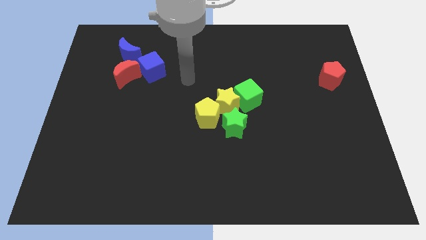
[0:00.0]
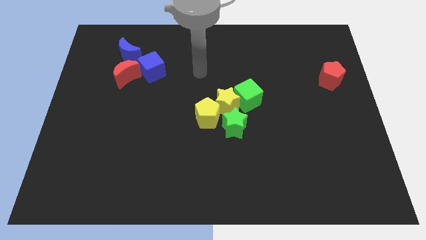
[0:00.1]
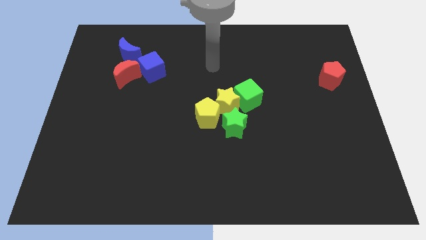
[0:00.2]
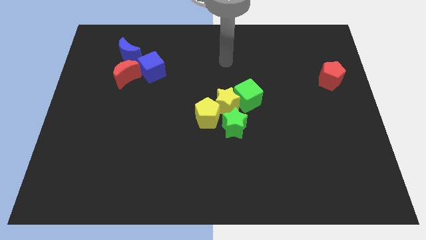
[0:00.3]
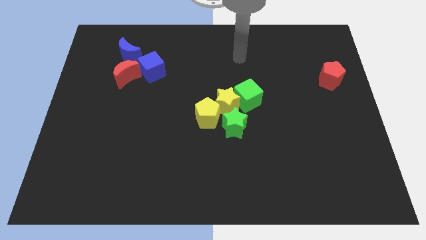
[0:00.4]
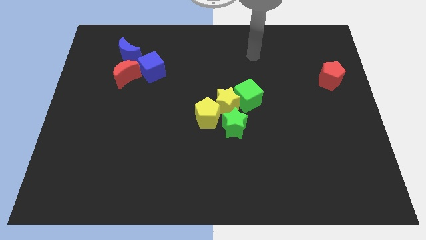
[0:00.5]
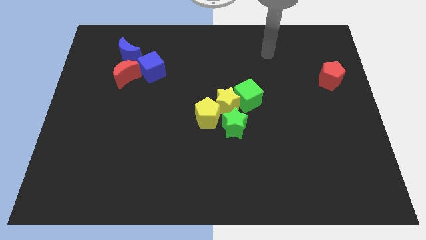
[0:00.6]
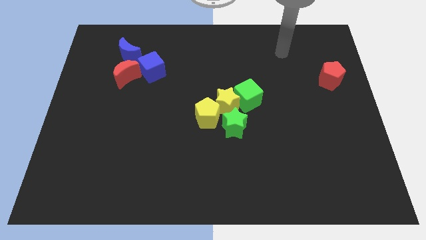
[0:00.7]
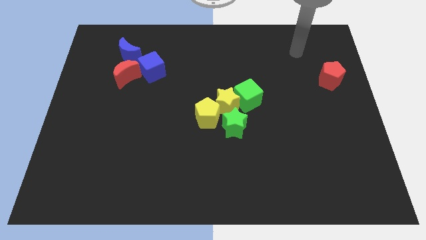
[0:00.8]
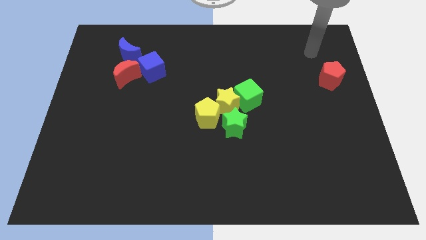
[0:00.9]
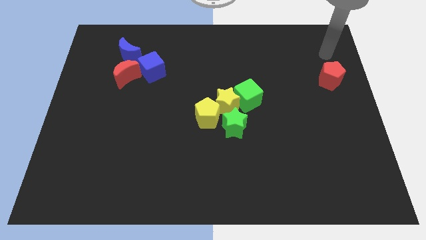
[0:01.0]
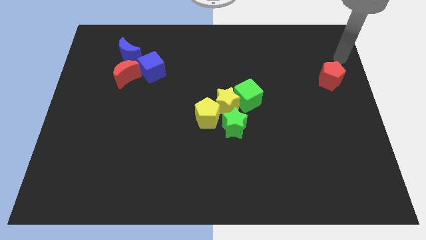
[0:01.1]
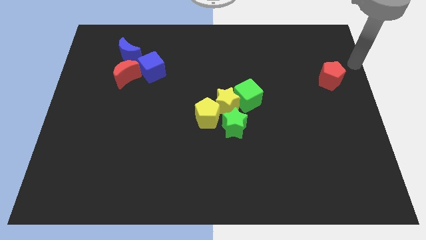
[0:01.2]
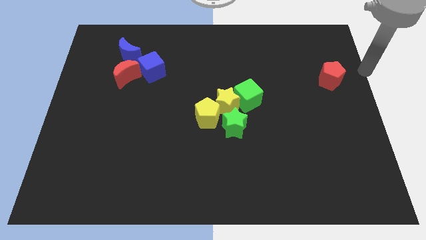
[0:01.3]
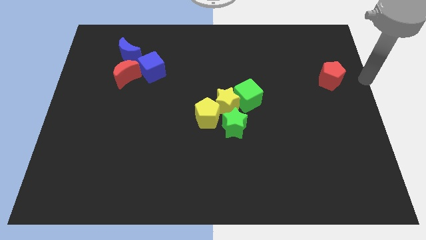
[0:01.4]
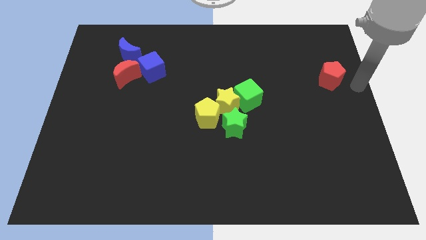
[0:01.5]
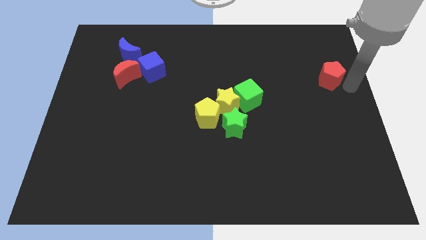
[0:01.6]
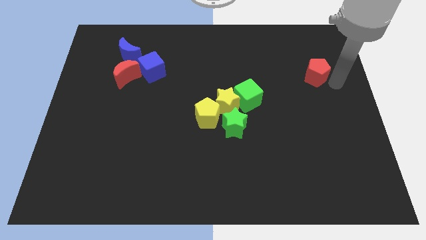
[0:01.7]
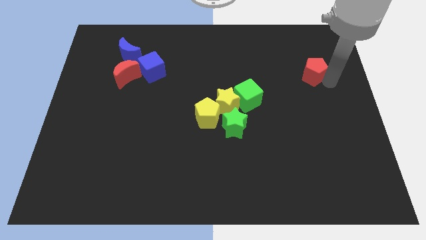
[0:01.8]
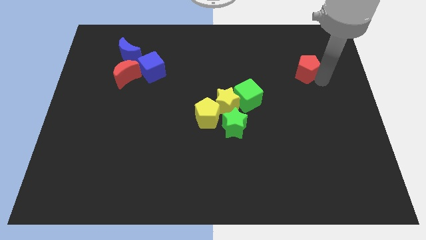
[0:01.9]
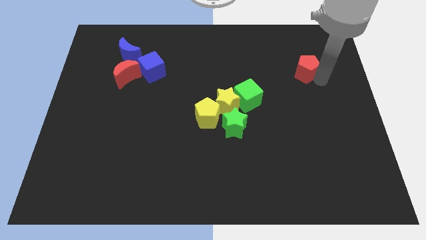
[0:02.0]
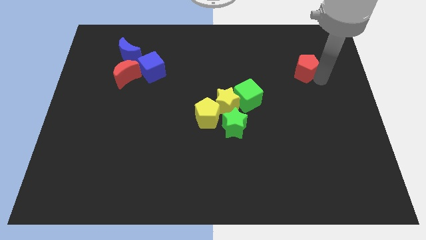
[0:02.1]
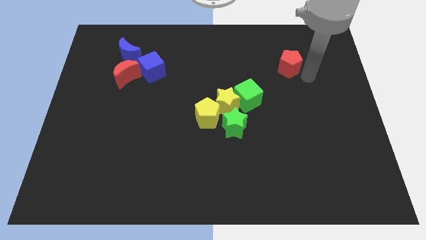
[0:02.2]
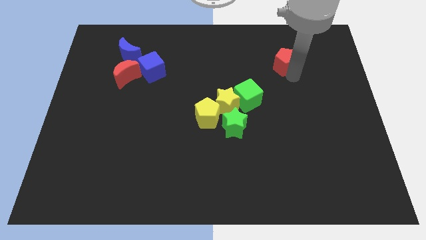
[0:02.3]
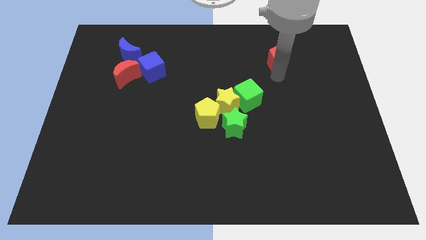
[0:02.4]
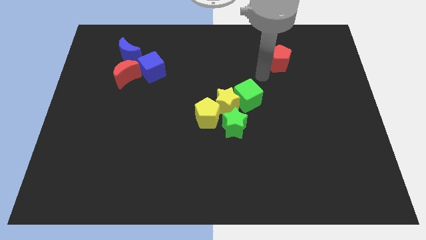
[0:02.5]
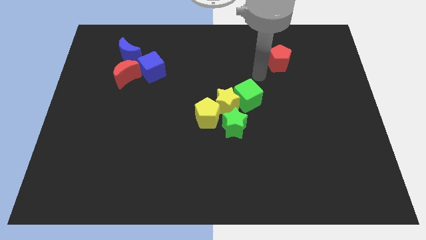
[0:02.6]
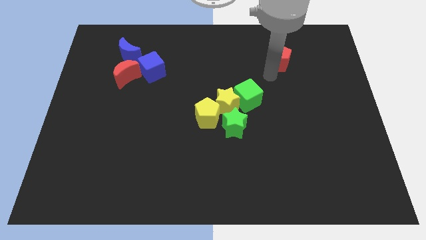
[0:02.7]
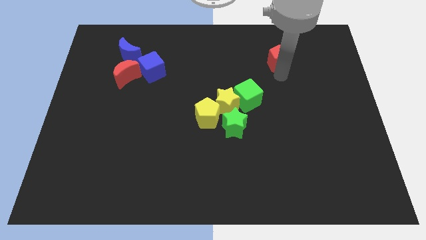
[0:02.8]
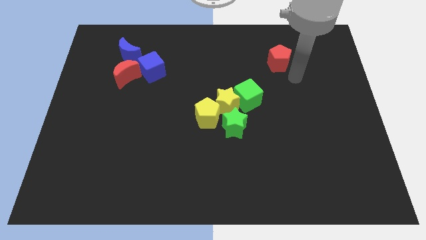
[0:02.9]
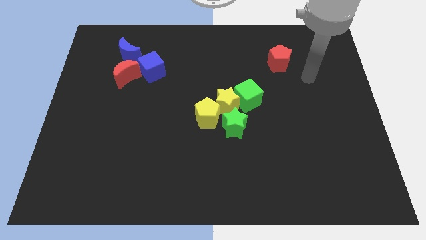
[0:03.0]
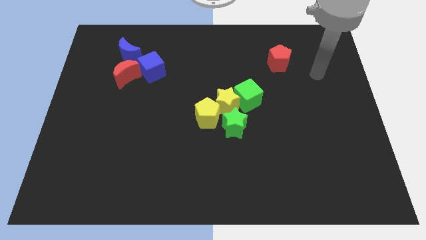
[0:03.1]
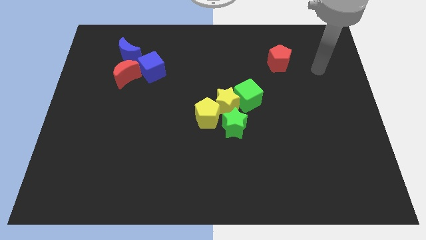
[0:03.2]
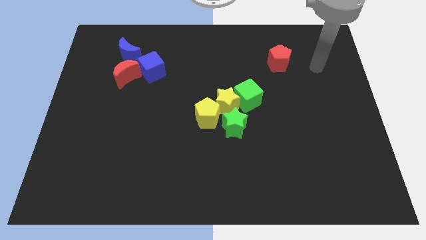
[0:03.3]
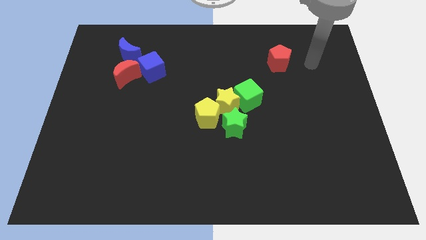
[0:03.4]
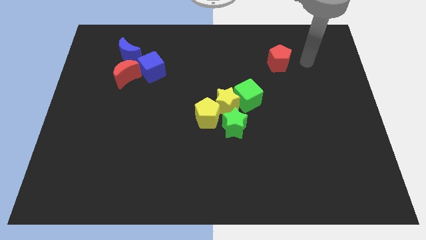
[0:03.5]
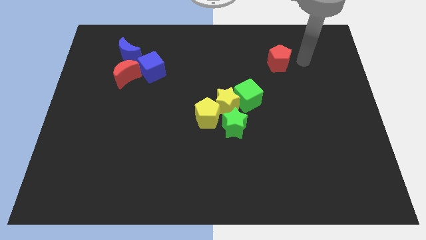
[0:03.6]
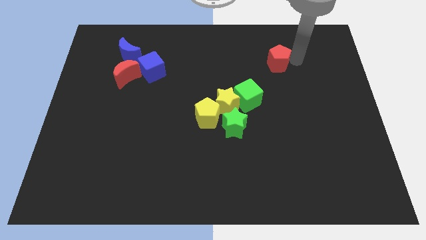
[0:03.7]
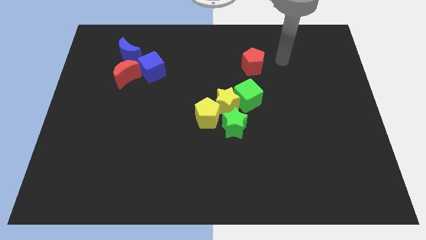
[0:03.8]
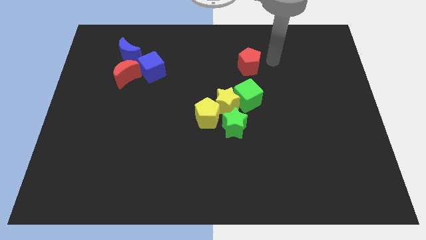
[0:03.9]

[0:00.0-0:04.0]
place the red pentagon on top of the green cube

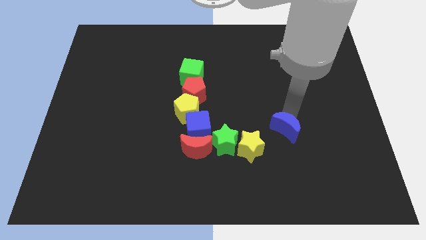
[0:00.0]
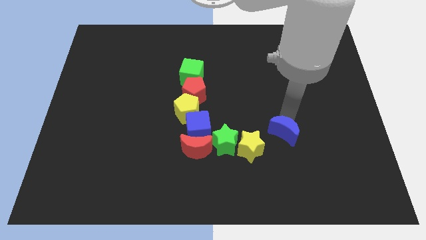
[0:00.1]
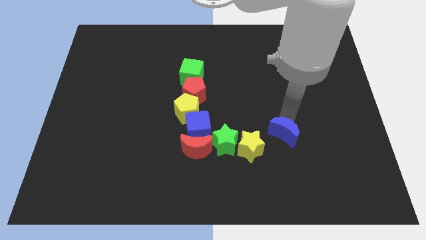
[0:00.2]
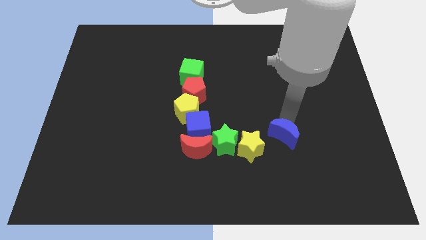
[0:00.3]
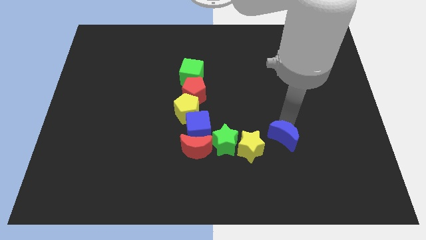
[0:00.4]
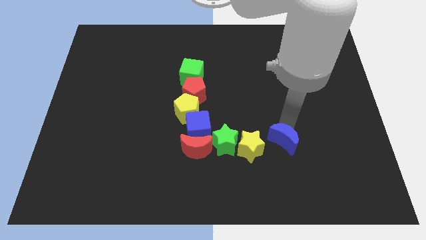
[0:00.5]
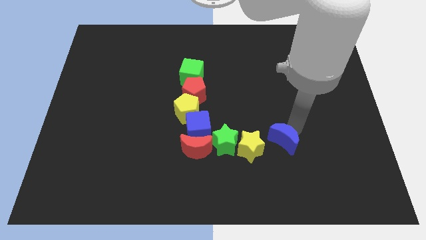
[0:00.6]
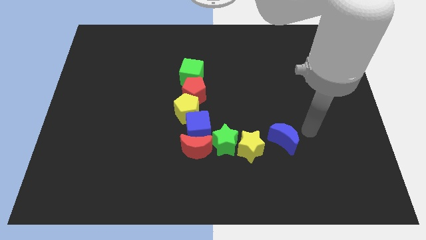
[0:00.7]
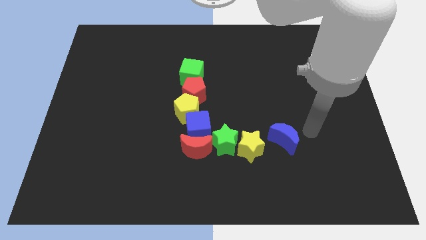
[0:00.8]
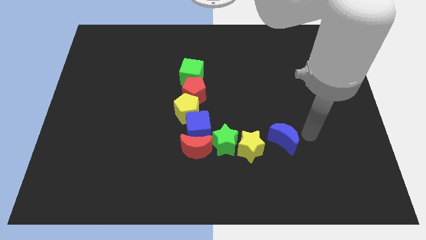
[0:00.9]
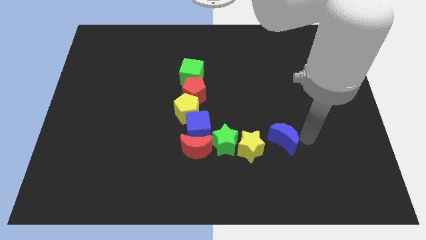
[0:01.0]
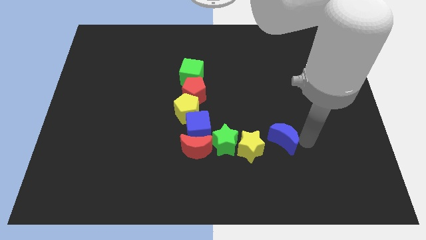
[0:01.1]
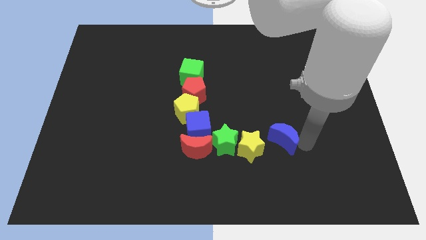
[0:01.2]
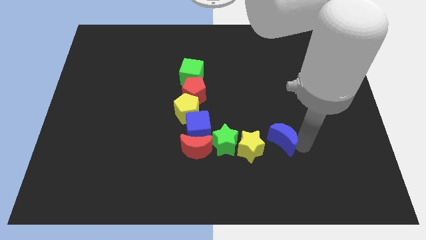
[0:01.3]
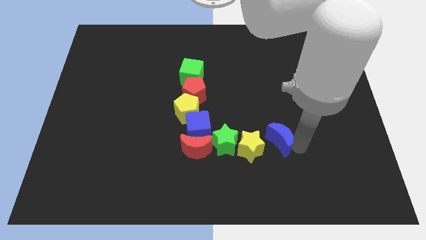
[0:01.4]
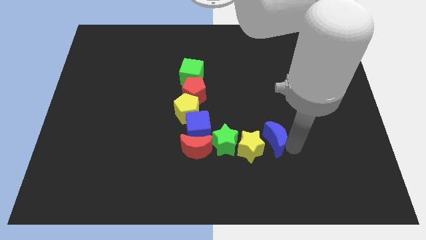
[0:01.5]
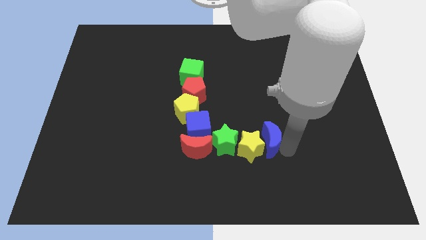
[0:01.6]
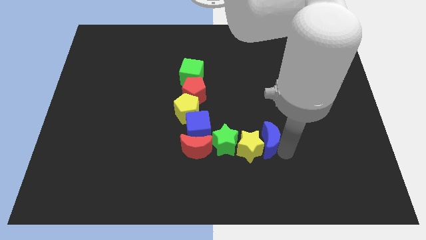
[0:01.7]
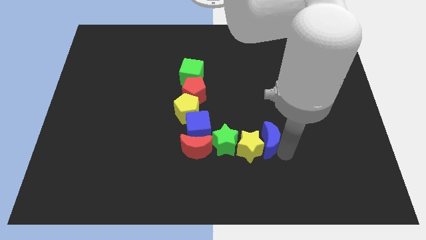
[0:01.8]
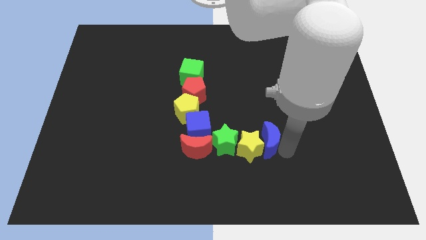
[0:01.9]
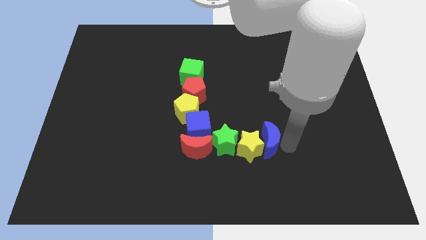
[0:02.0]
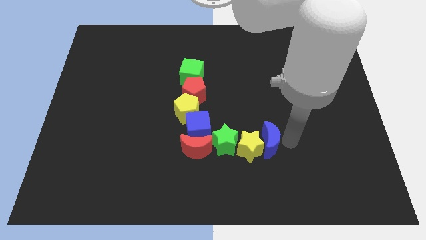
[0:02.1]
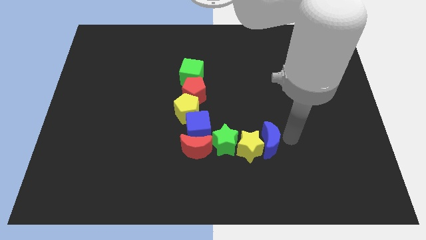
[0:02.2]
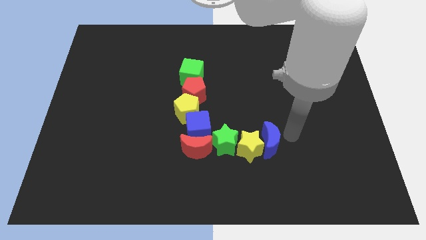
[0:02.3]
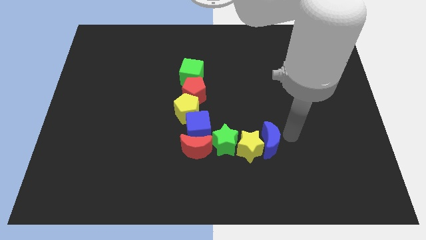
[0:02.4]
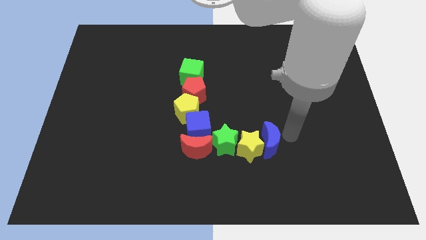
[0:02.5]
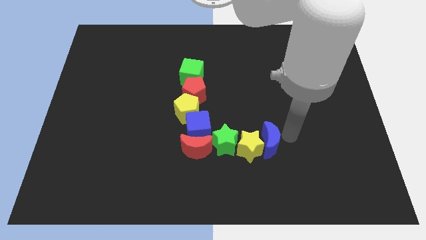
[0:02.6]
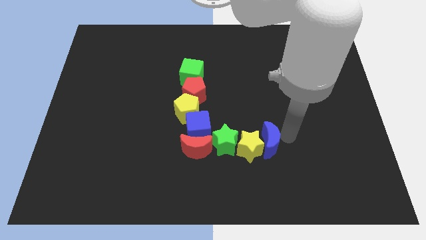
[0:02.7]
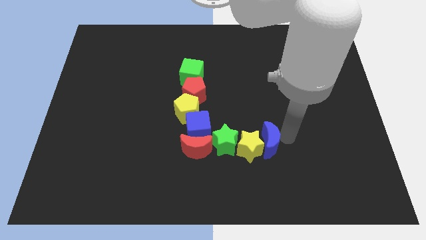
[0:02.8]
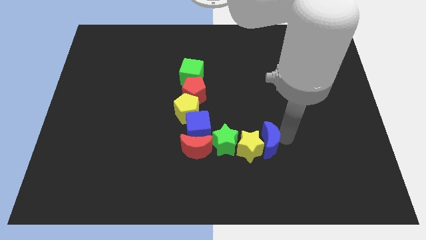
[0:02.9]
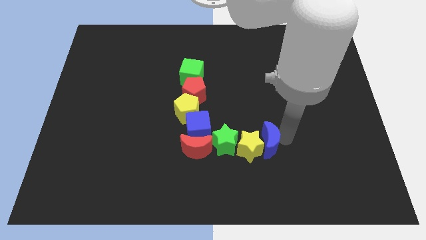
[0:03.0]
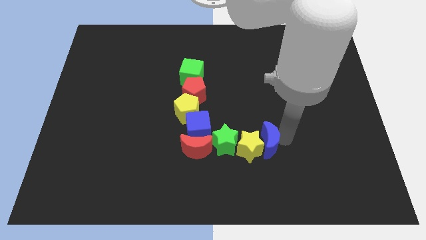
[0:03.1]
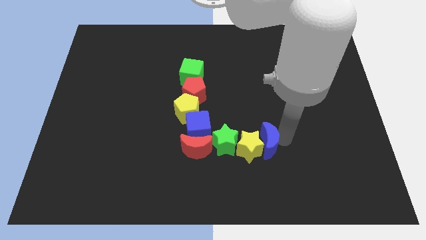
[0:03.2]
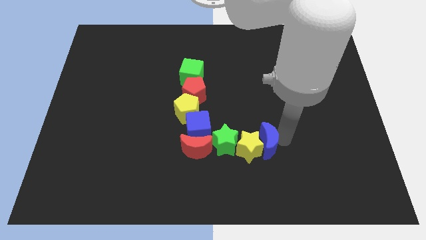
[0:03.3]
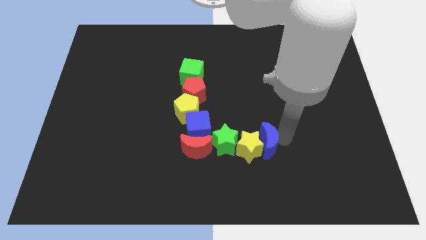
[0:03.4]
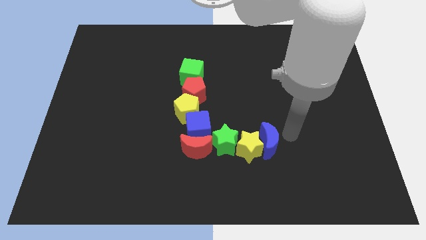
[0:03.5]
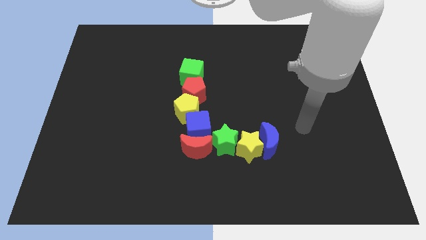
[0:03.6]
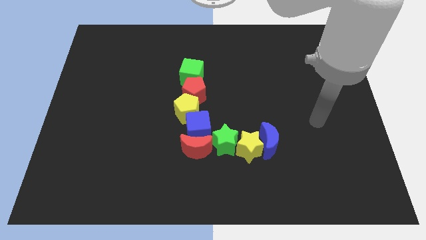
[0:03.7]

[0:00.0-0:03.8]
move the blue moon to the right of the yellow star

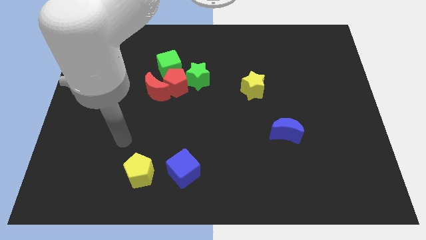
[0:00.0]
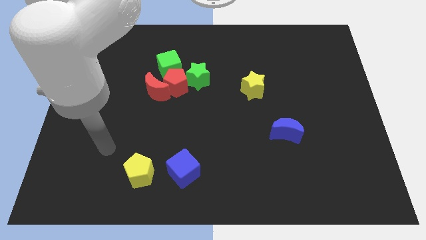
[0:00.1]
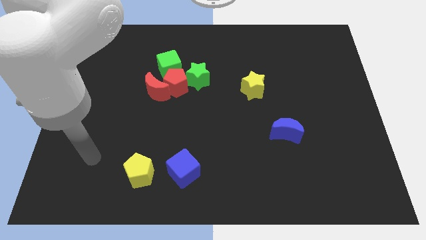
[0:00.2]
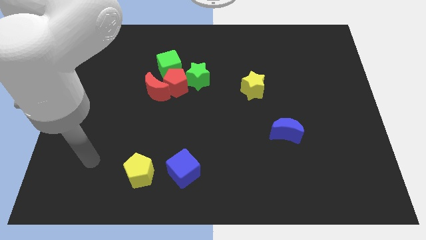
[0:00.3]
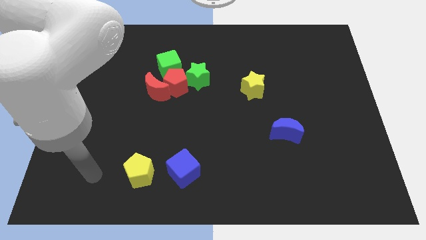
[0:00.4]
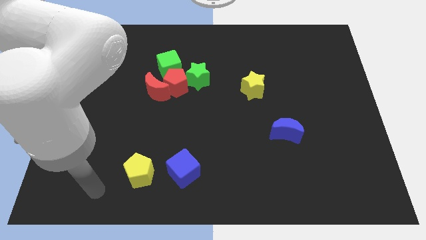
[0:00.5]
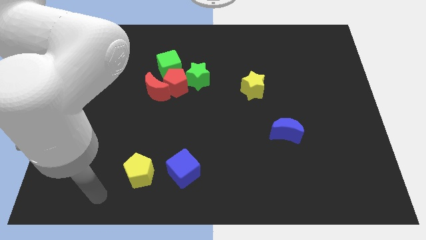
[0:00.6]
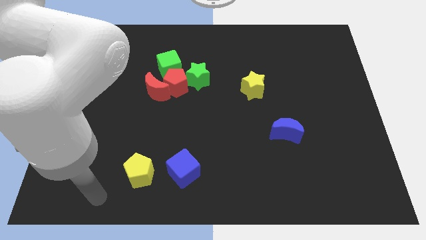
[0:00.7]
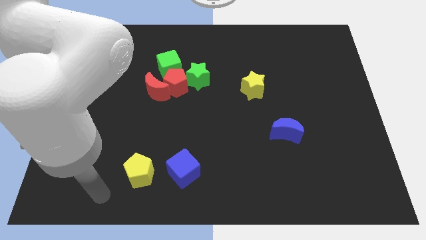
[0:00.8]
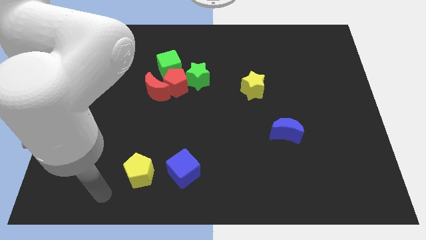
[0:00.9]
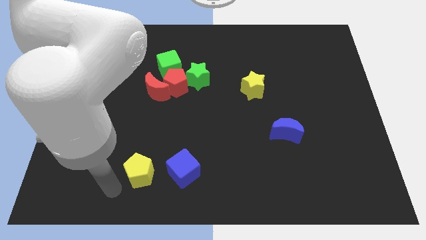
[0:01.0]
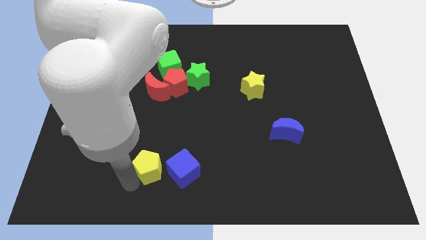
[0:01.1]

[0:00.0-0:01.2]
slightly push yellow pentagon to the top
